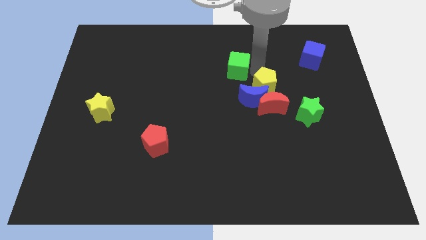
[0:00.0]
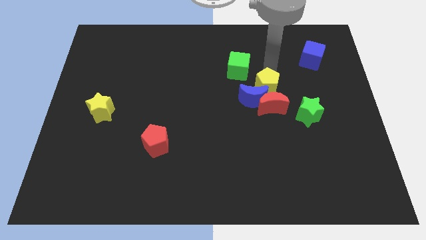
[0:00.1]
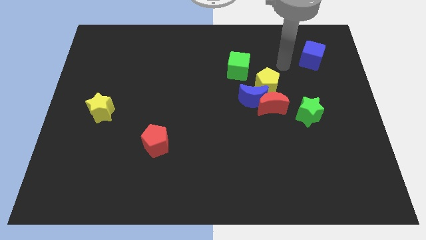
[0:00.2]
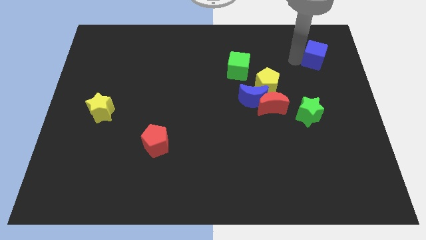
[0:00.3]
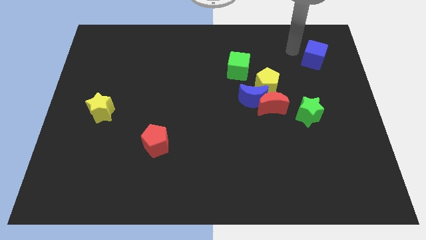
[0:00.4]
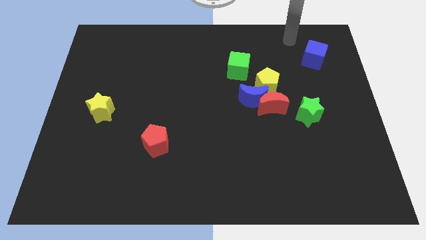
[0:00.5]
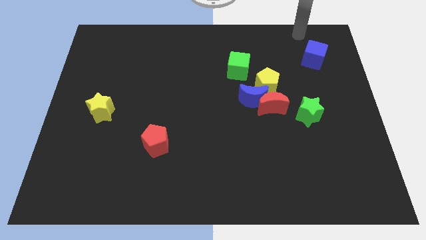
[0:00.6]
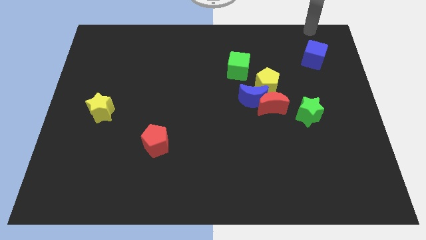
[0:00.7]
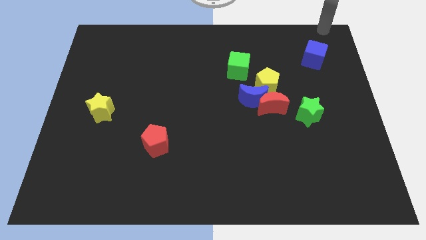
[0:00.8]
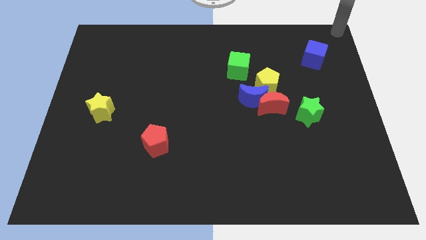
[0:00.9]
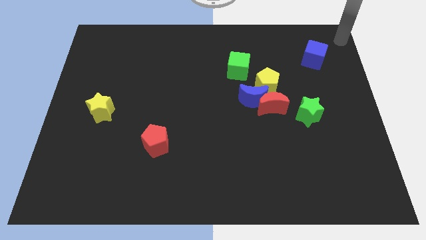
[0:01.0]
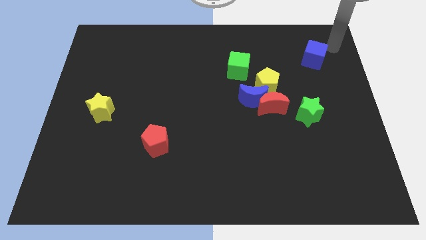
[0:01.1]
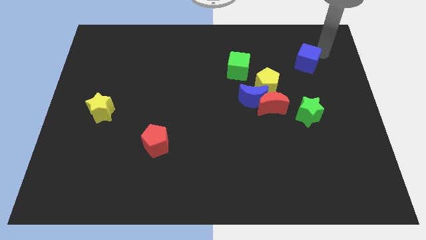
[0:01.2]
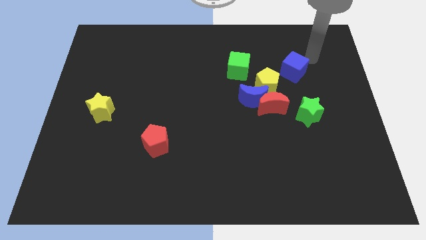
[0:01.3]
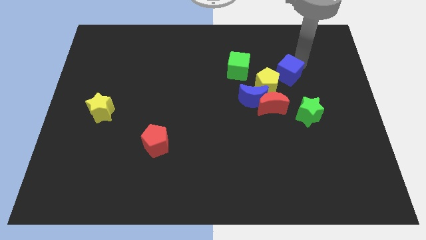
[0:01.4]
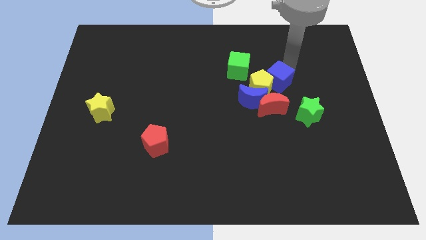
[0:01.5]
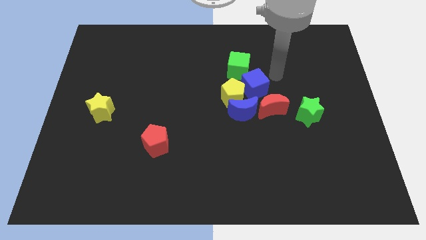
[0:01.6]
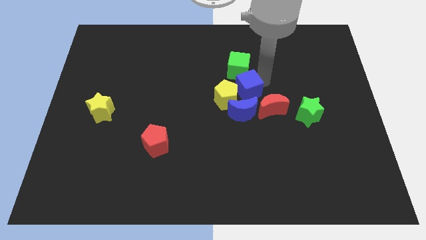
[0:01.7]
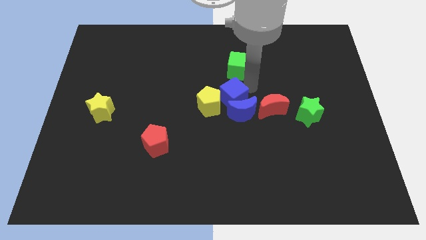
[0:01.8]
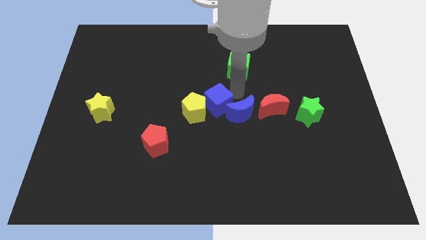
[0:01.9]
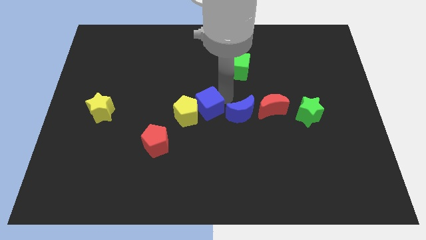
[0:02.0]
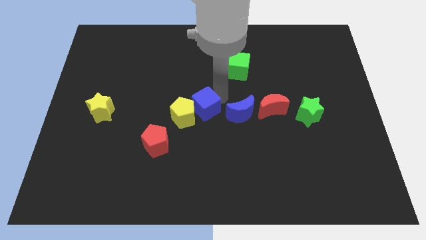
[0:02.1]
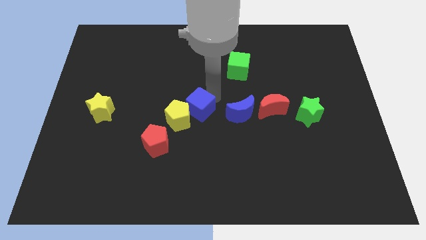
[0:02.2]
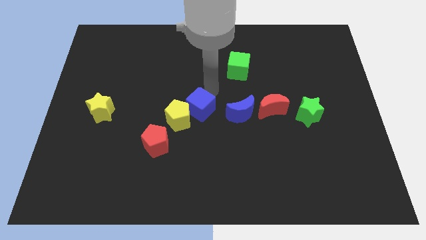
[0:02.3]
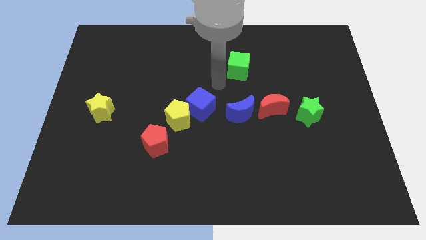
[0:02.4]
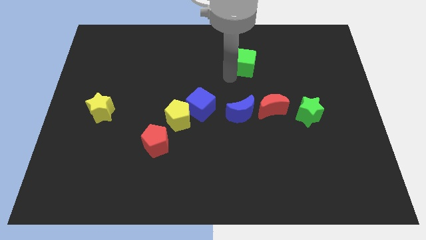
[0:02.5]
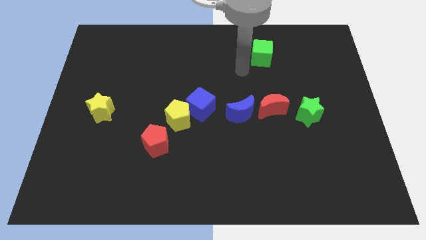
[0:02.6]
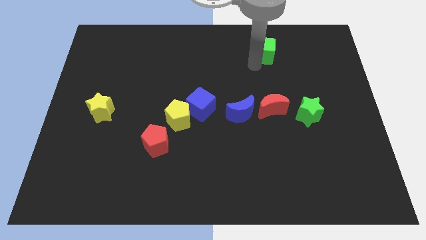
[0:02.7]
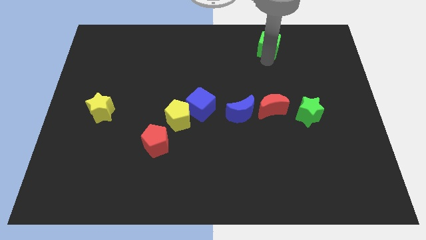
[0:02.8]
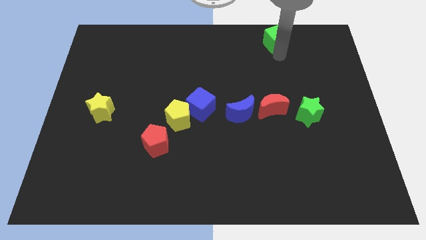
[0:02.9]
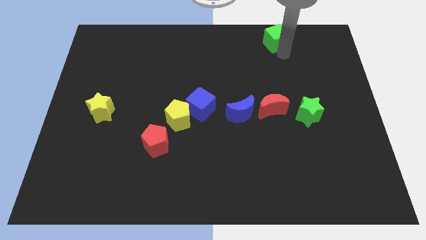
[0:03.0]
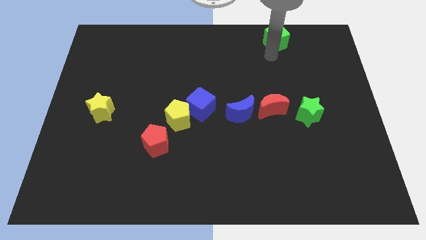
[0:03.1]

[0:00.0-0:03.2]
place blue cube and yellow pentagon to the center of the board

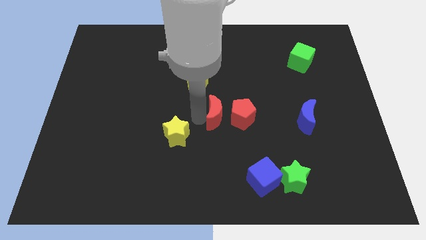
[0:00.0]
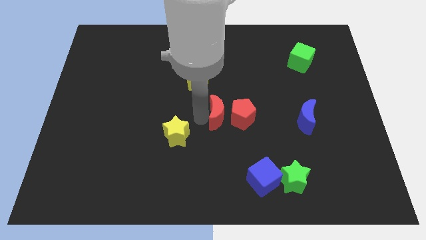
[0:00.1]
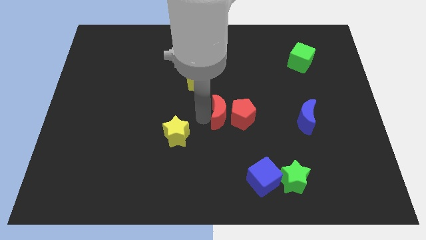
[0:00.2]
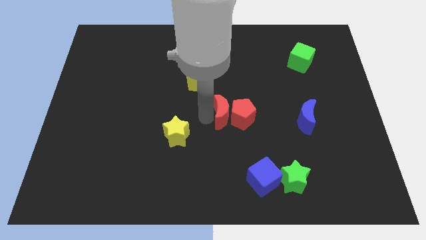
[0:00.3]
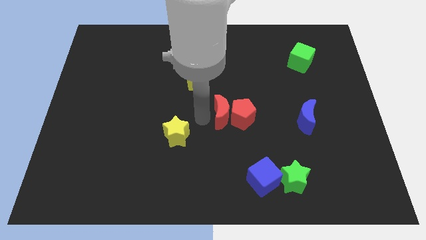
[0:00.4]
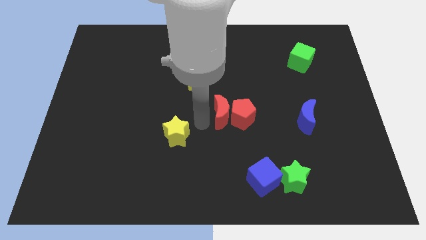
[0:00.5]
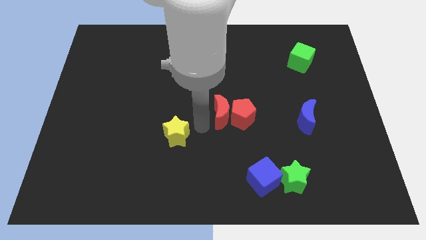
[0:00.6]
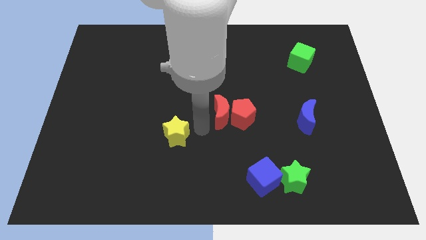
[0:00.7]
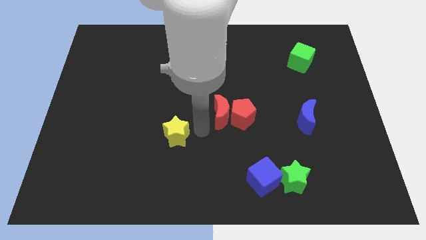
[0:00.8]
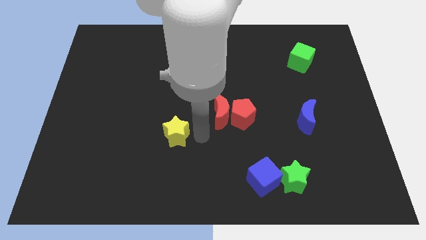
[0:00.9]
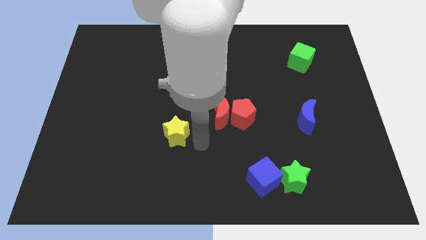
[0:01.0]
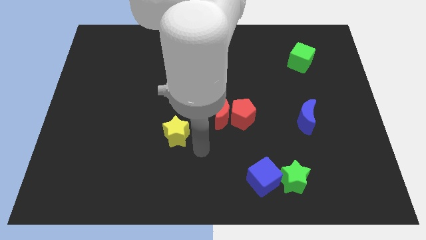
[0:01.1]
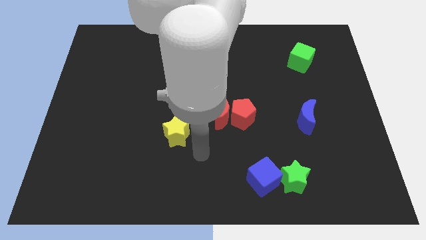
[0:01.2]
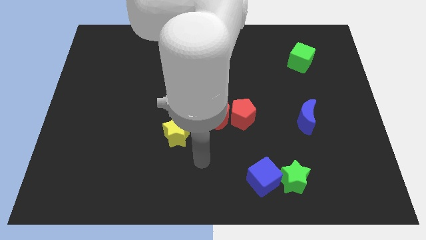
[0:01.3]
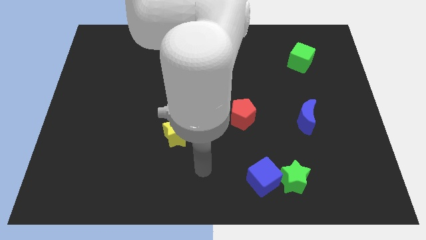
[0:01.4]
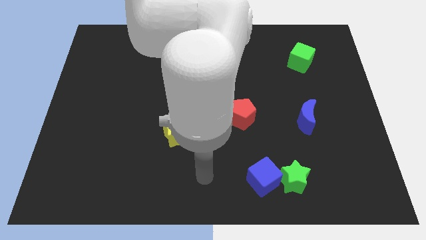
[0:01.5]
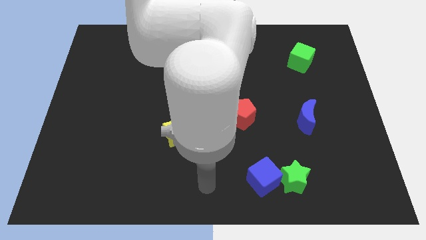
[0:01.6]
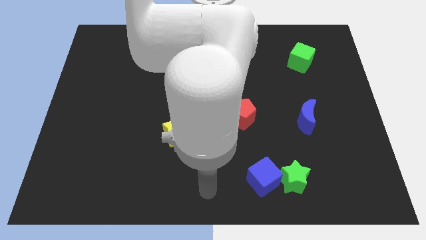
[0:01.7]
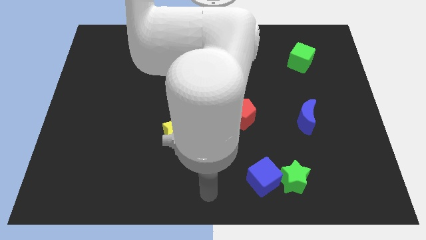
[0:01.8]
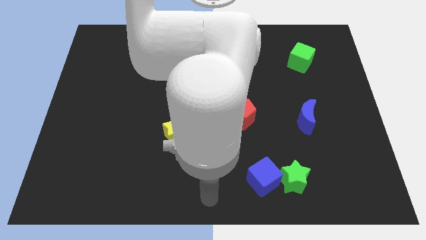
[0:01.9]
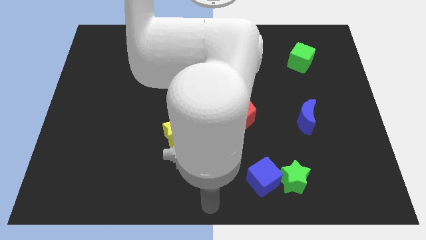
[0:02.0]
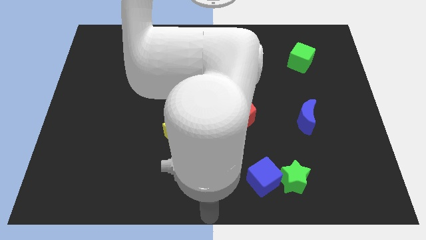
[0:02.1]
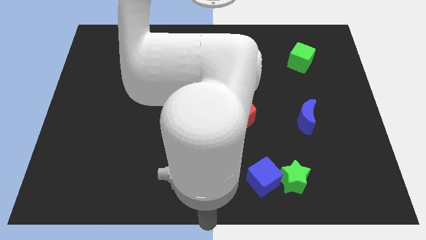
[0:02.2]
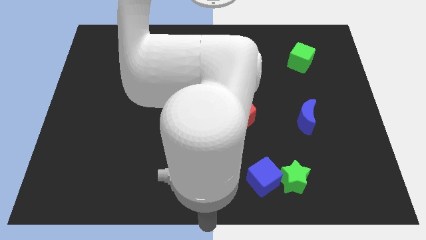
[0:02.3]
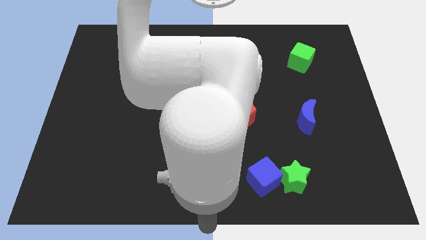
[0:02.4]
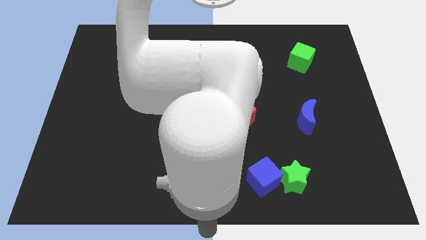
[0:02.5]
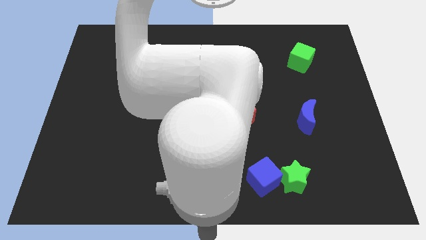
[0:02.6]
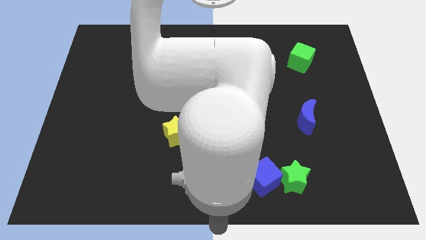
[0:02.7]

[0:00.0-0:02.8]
move the arm towards the bottom centre of the board

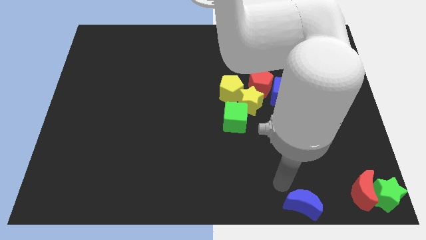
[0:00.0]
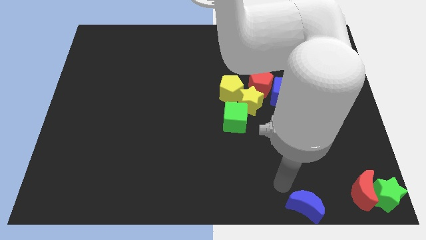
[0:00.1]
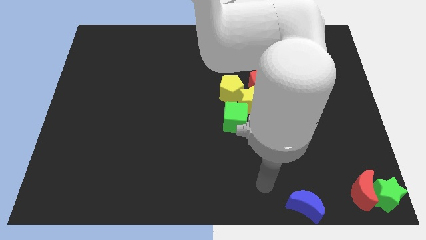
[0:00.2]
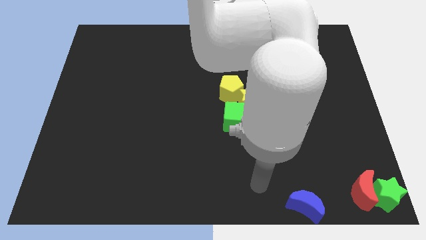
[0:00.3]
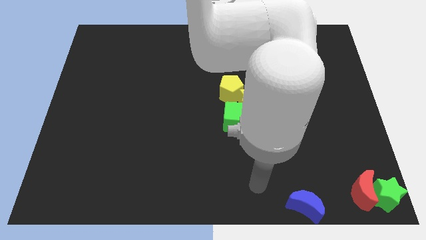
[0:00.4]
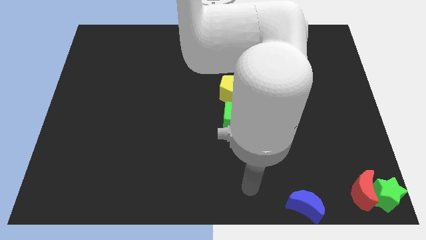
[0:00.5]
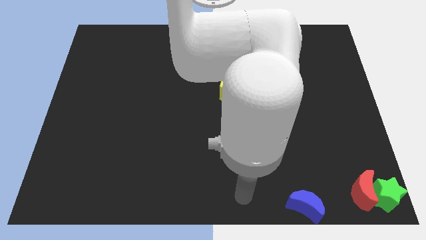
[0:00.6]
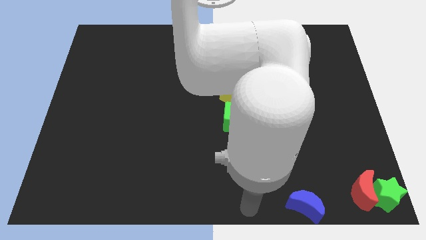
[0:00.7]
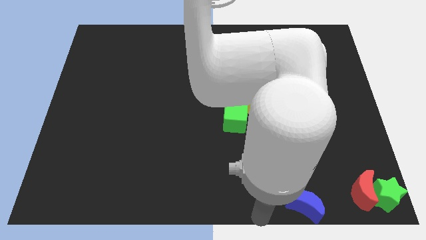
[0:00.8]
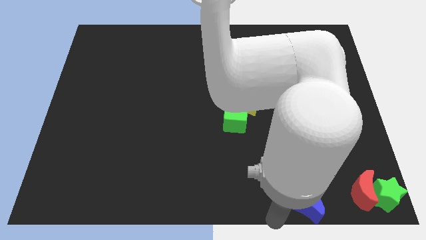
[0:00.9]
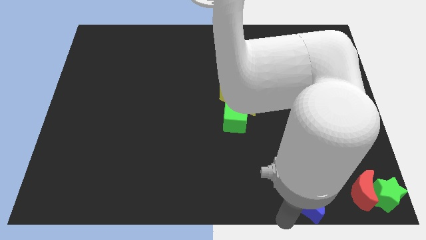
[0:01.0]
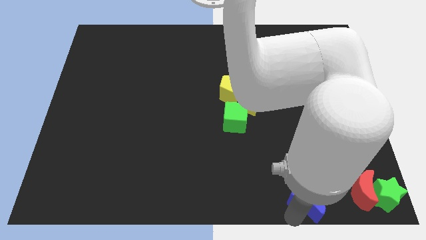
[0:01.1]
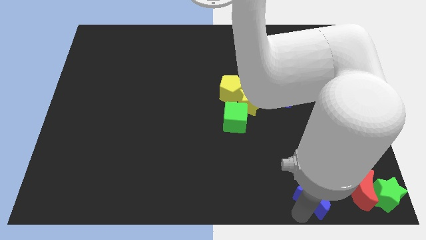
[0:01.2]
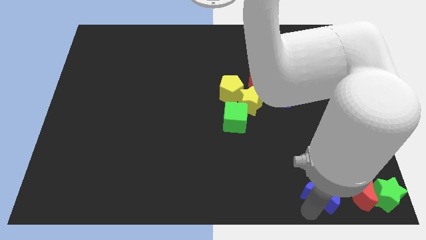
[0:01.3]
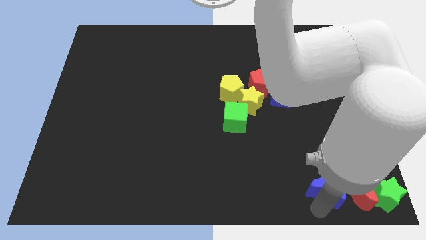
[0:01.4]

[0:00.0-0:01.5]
move blue cube towards red moon

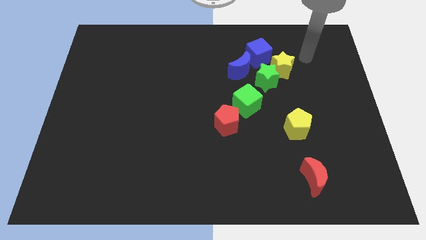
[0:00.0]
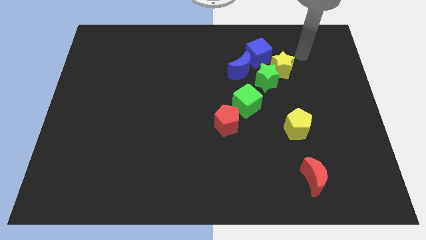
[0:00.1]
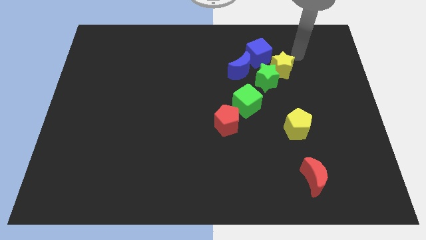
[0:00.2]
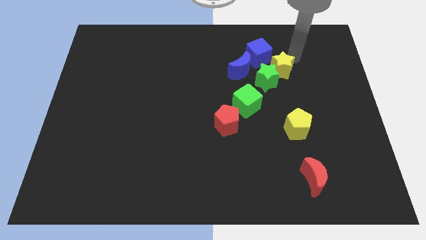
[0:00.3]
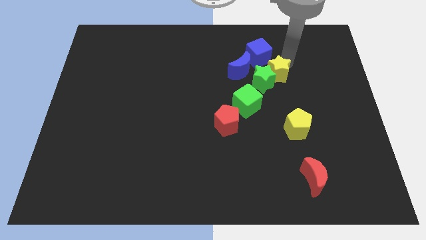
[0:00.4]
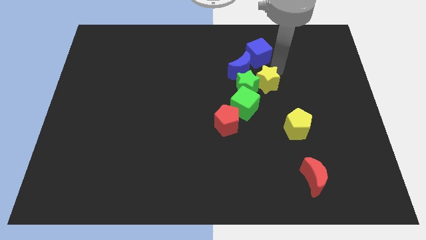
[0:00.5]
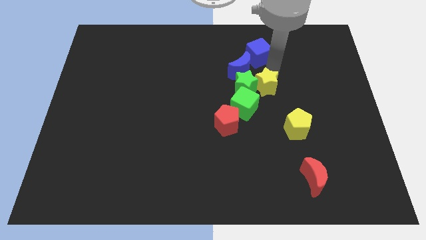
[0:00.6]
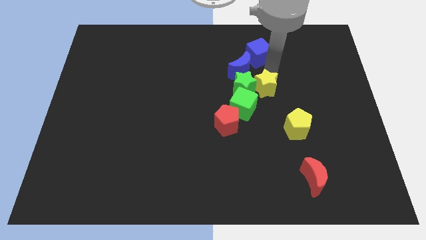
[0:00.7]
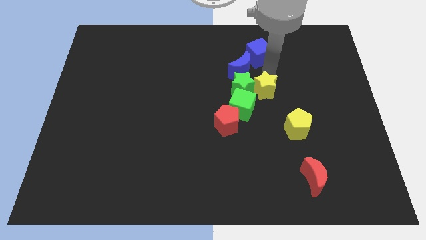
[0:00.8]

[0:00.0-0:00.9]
push the yellow star into the green blocks

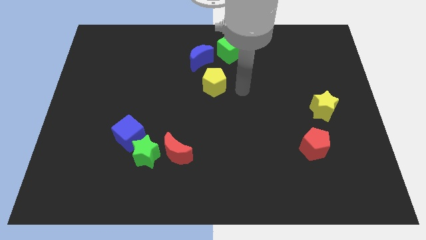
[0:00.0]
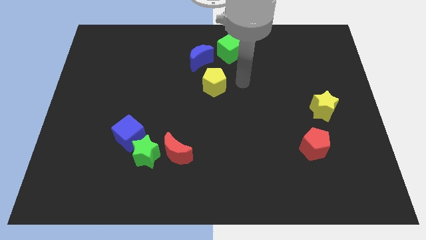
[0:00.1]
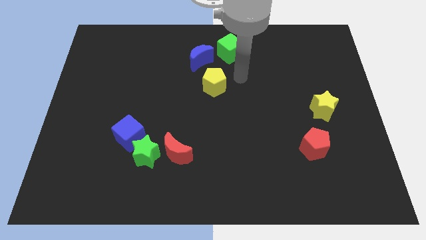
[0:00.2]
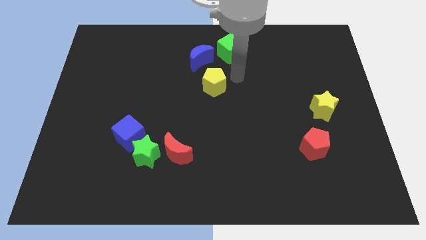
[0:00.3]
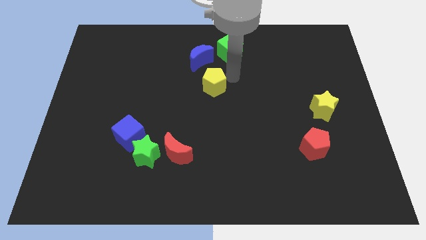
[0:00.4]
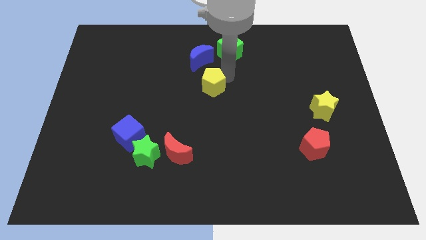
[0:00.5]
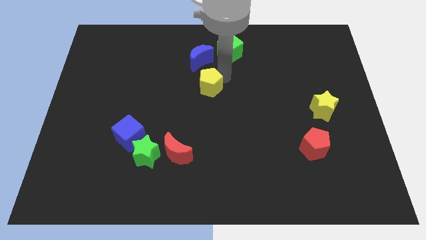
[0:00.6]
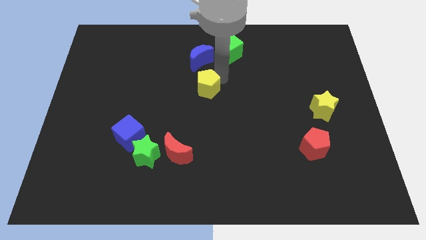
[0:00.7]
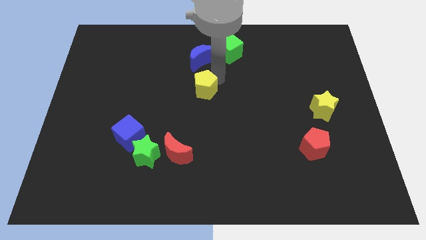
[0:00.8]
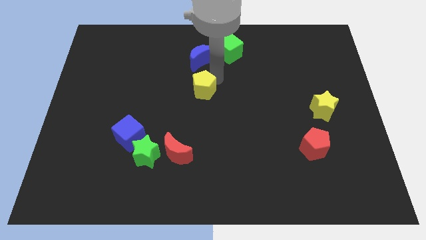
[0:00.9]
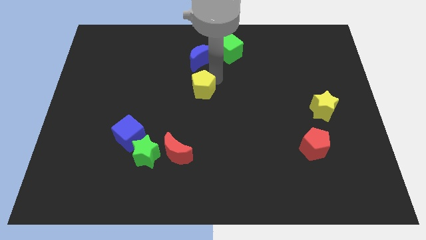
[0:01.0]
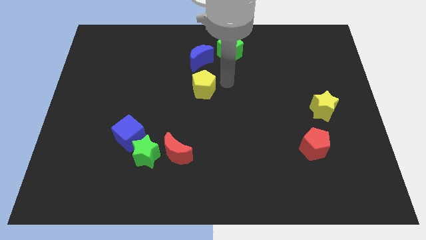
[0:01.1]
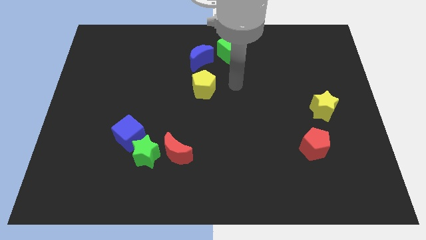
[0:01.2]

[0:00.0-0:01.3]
adjust the yellow pentagon to the bottom side of the blue crescent
